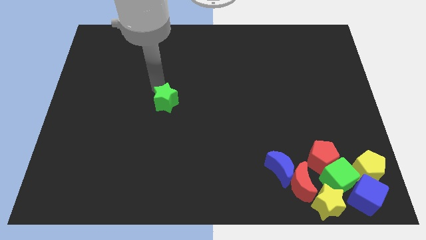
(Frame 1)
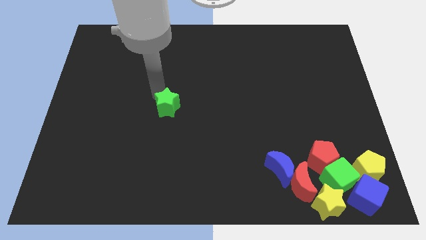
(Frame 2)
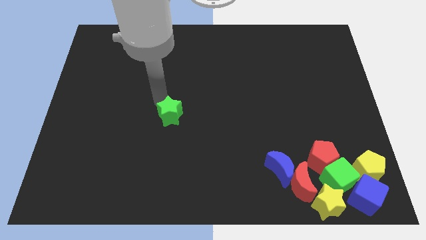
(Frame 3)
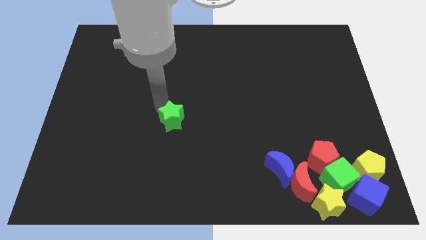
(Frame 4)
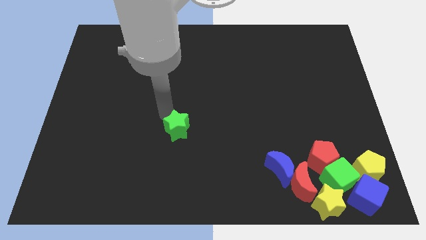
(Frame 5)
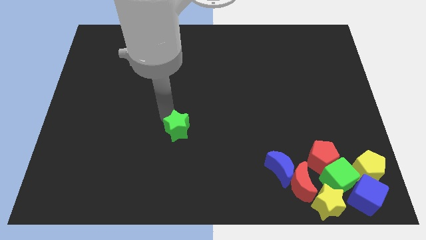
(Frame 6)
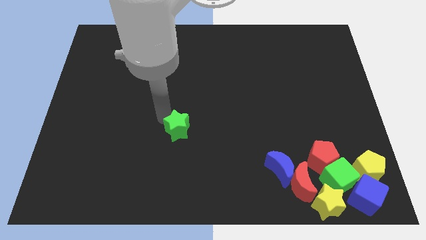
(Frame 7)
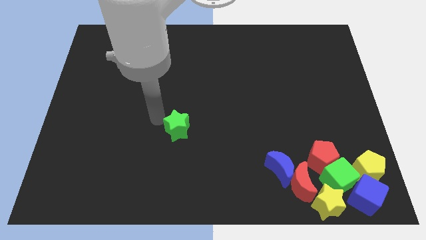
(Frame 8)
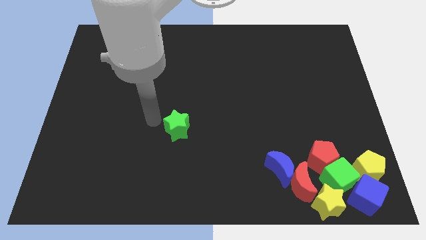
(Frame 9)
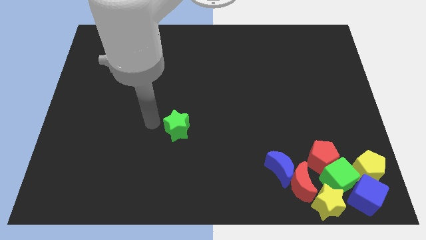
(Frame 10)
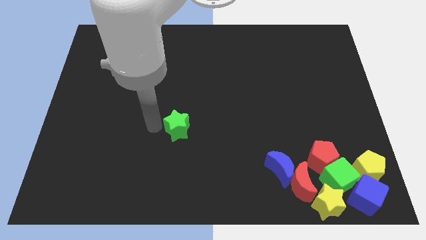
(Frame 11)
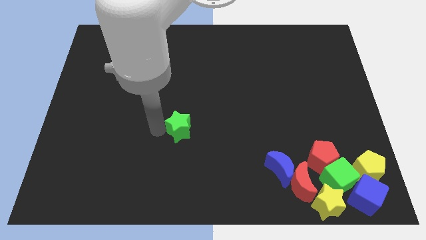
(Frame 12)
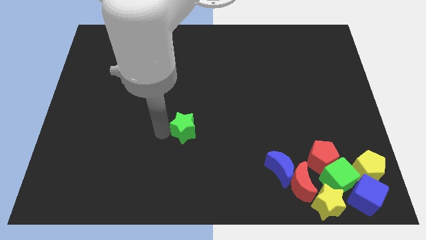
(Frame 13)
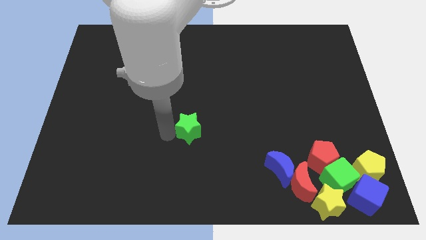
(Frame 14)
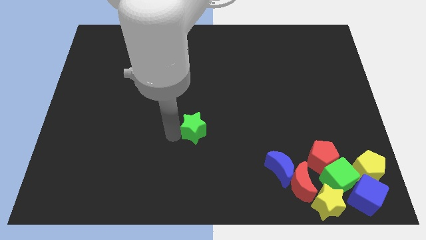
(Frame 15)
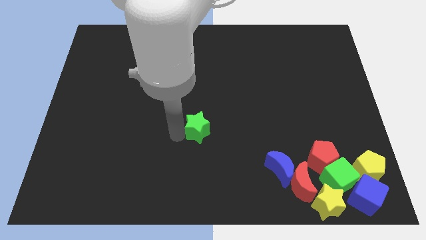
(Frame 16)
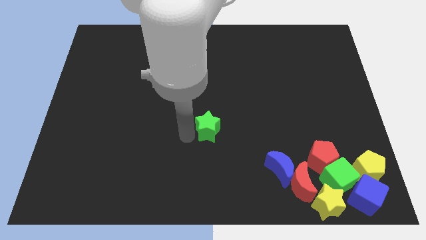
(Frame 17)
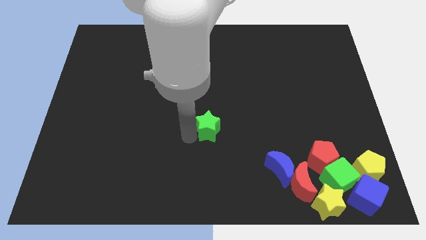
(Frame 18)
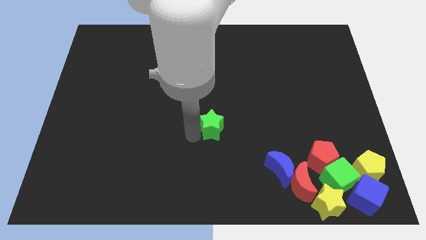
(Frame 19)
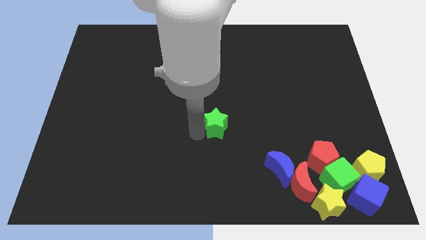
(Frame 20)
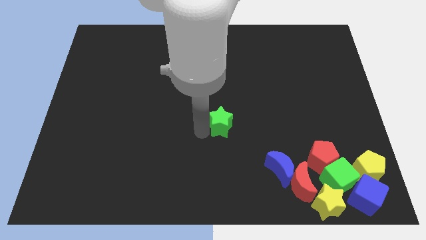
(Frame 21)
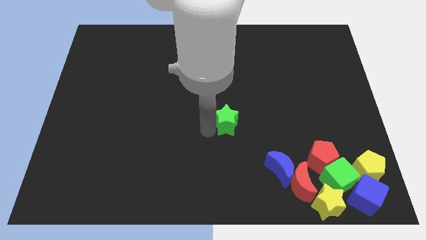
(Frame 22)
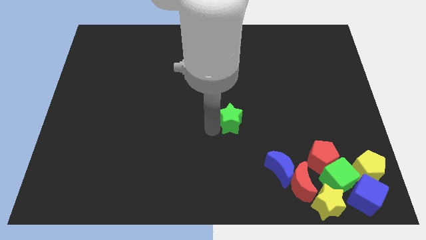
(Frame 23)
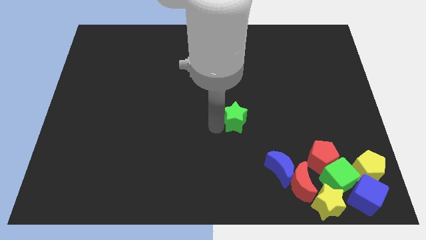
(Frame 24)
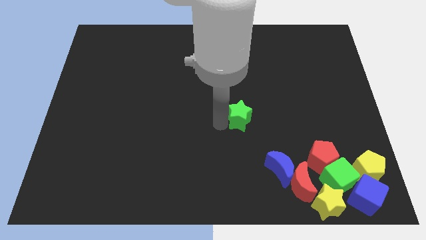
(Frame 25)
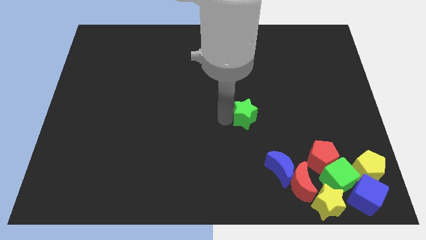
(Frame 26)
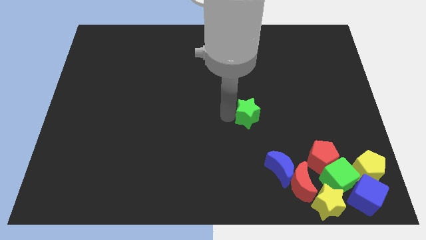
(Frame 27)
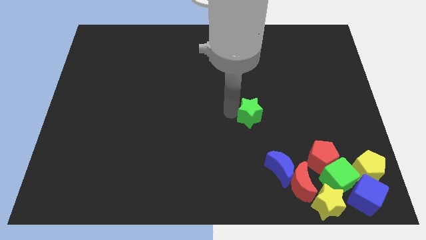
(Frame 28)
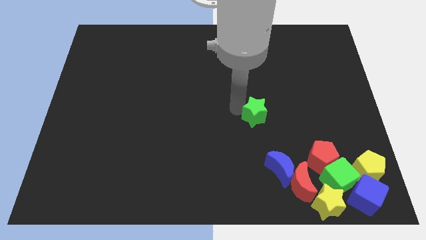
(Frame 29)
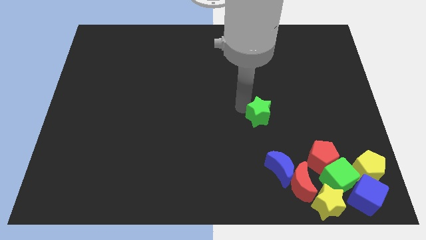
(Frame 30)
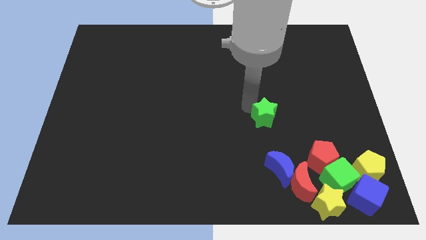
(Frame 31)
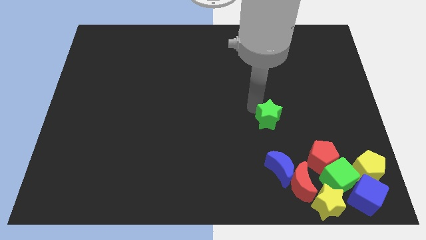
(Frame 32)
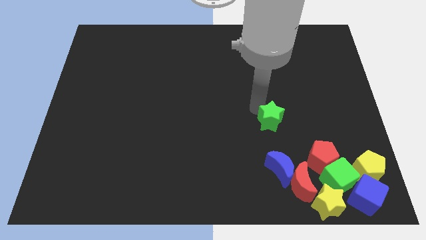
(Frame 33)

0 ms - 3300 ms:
move the green star towards the group of blocks

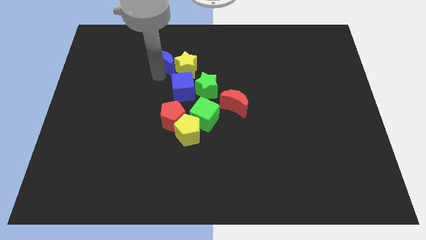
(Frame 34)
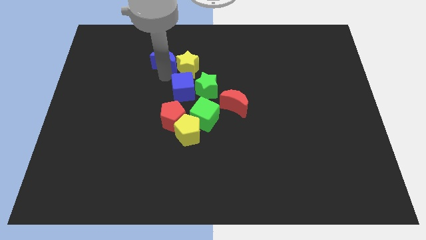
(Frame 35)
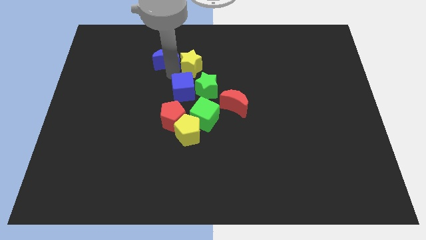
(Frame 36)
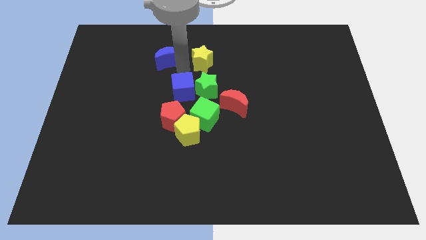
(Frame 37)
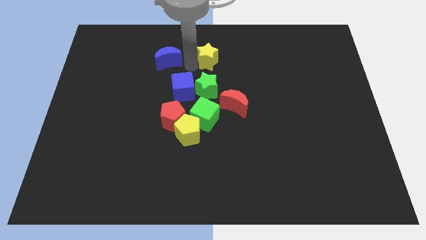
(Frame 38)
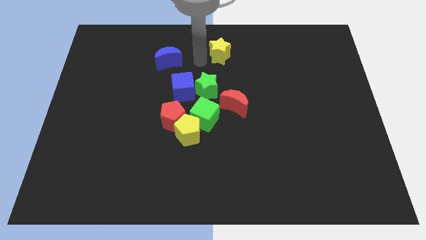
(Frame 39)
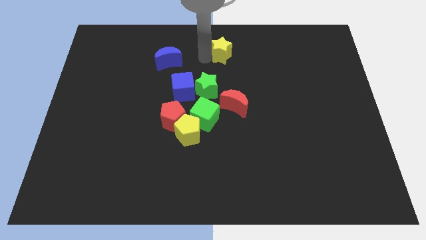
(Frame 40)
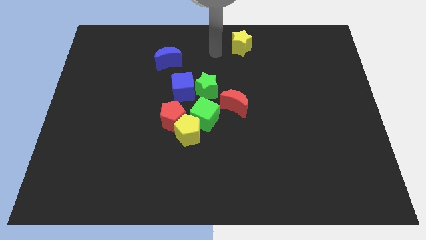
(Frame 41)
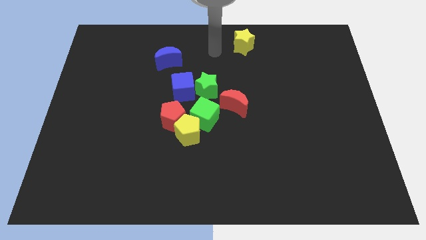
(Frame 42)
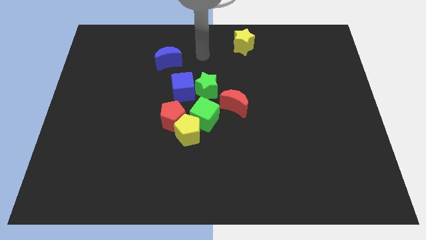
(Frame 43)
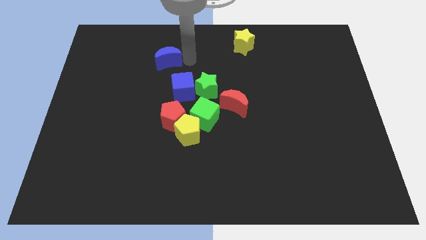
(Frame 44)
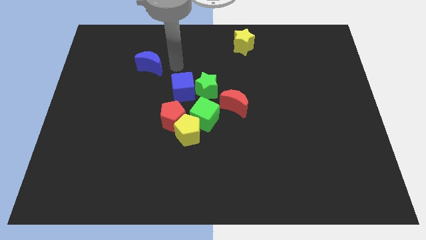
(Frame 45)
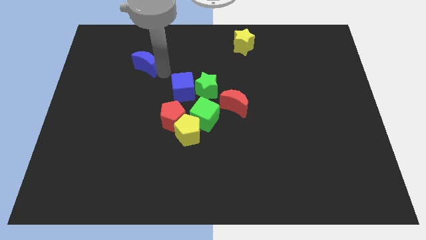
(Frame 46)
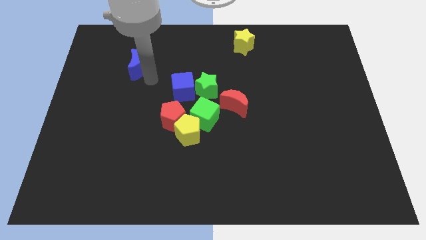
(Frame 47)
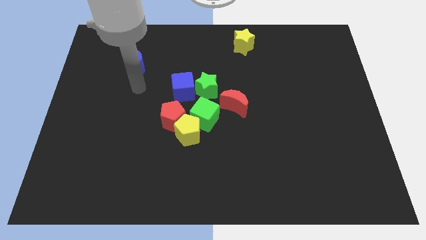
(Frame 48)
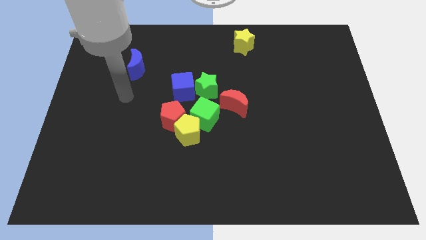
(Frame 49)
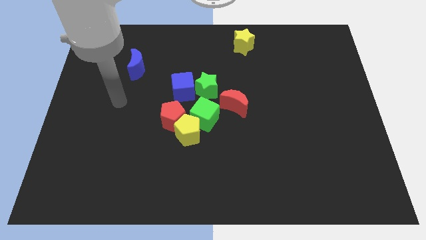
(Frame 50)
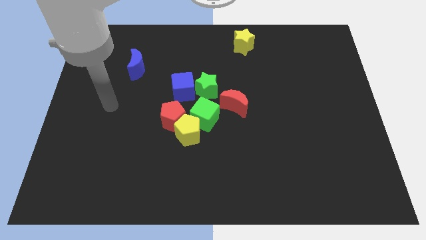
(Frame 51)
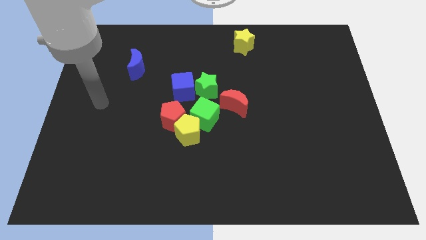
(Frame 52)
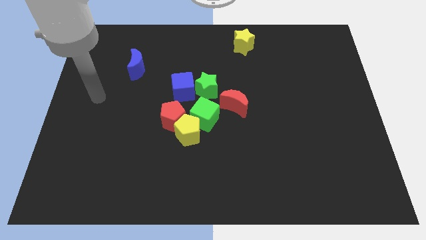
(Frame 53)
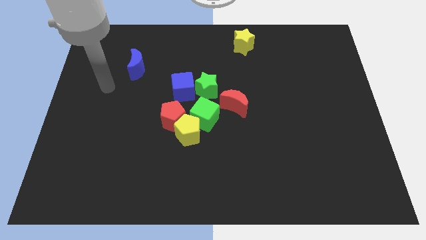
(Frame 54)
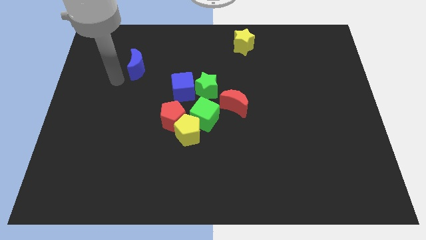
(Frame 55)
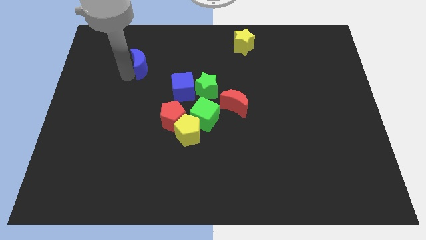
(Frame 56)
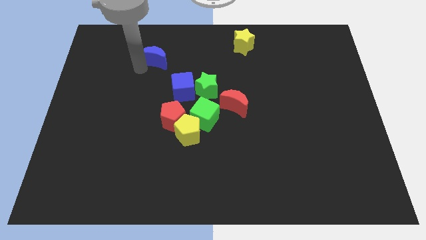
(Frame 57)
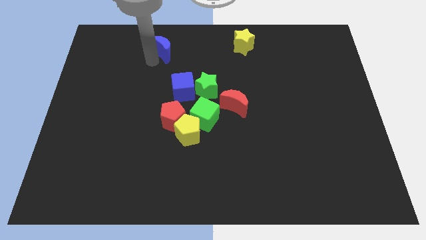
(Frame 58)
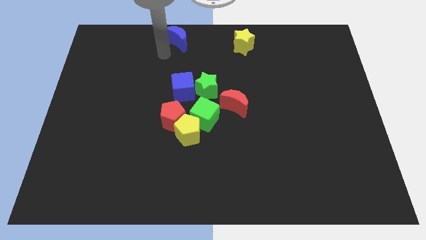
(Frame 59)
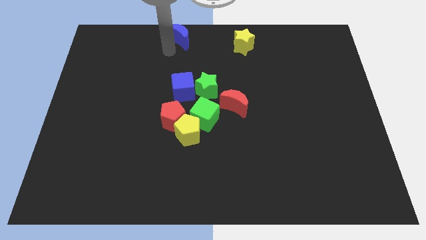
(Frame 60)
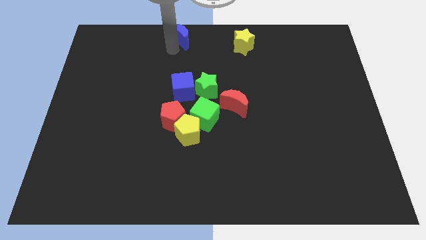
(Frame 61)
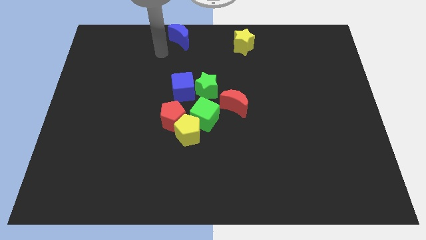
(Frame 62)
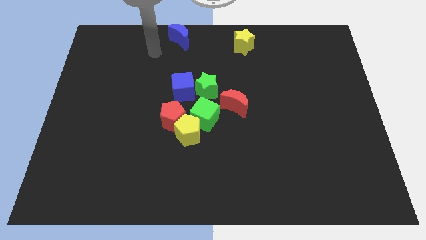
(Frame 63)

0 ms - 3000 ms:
move the yellow star and the blue crescent to the top of the board

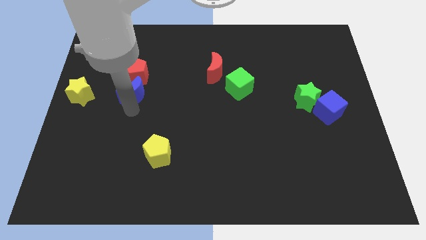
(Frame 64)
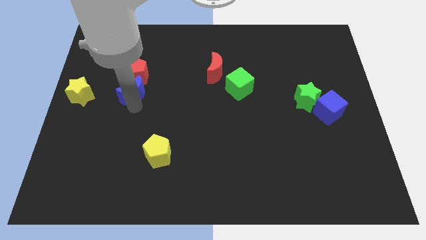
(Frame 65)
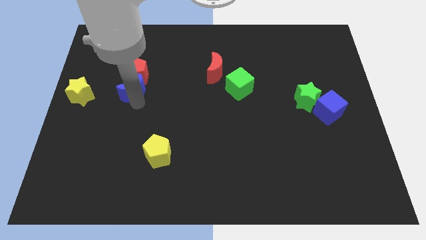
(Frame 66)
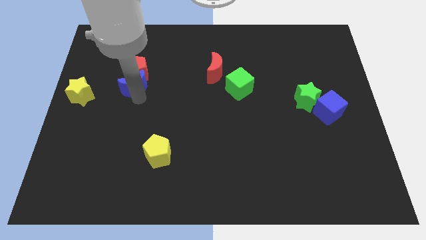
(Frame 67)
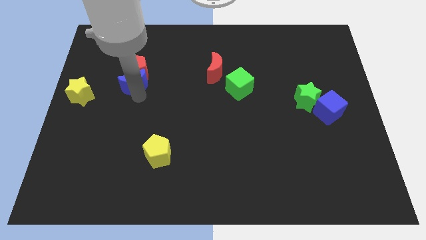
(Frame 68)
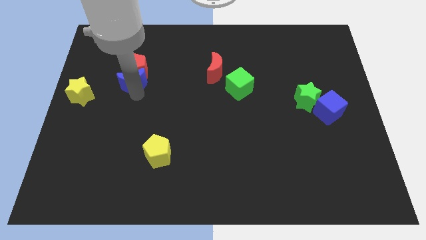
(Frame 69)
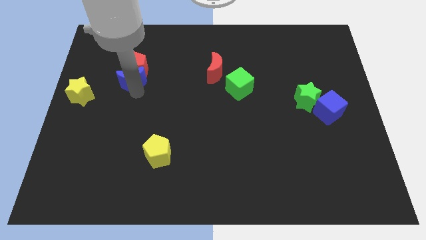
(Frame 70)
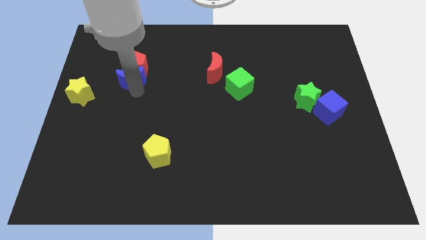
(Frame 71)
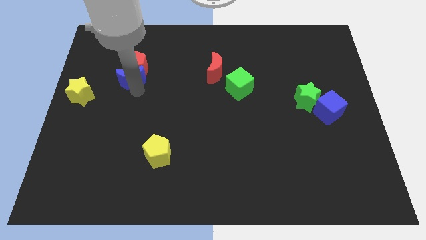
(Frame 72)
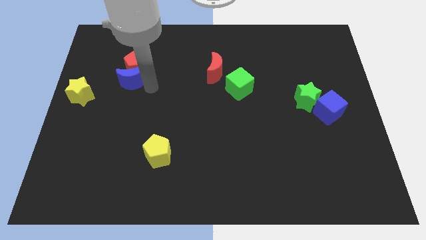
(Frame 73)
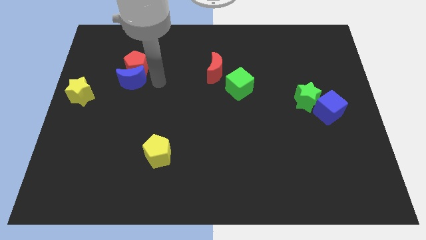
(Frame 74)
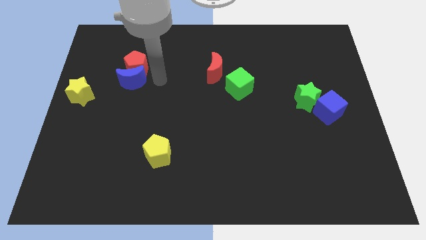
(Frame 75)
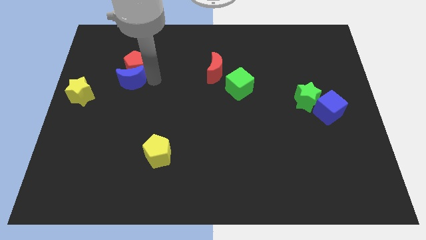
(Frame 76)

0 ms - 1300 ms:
slide the blue moon into the red pentagon

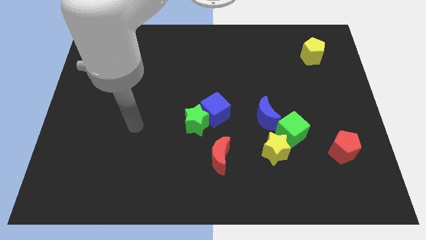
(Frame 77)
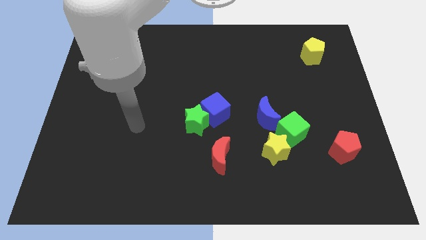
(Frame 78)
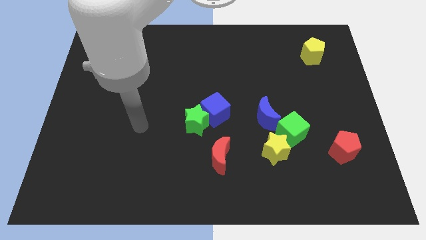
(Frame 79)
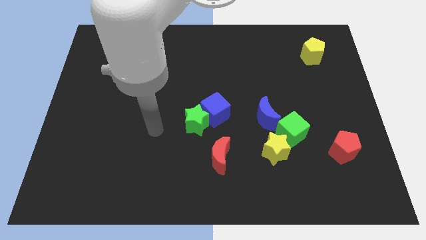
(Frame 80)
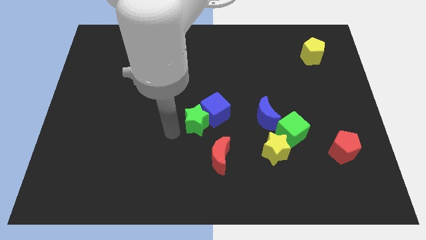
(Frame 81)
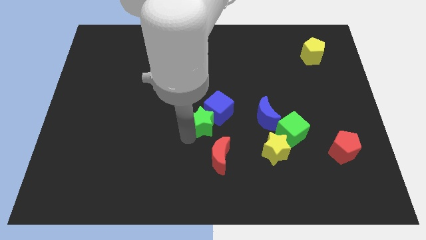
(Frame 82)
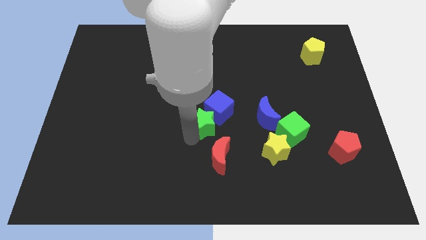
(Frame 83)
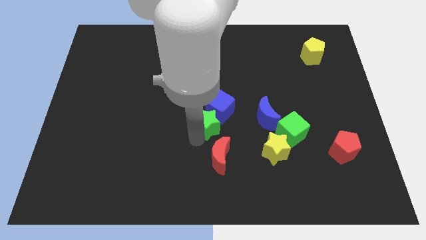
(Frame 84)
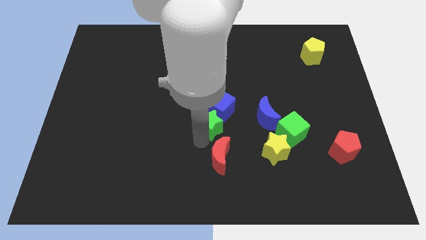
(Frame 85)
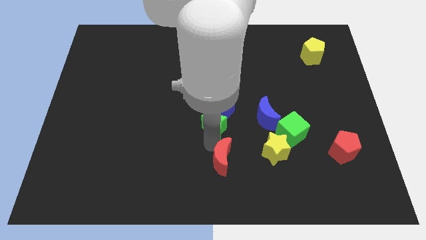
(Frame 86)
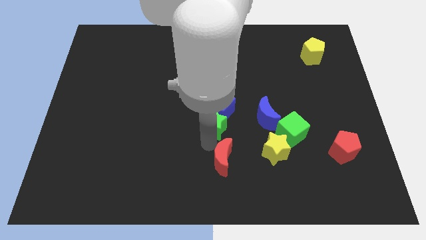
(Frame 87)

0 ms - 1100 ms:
move the green star towards the red moon

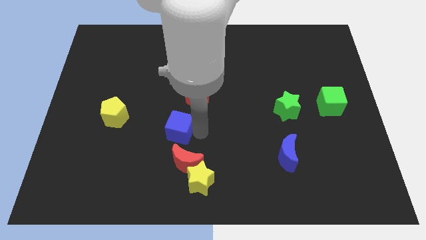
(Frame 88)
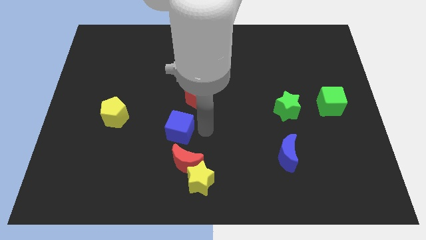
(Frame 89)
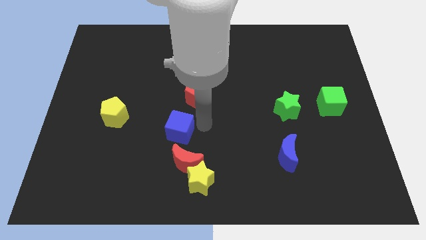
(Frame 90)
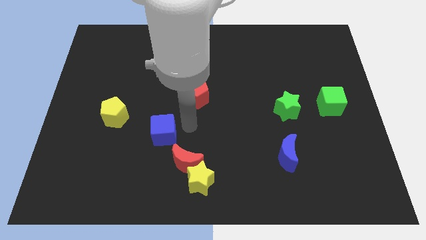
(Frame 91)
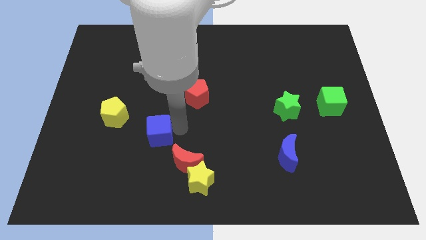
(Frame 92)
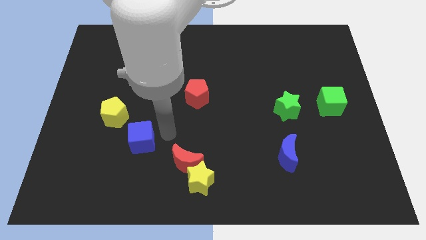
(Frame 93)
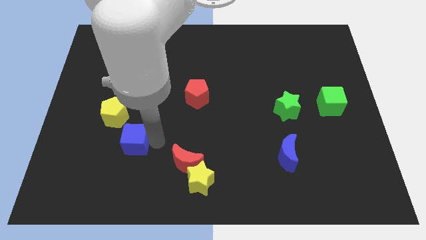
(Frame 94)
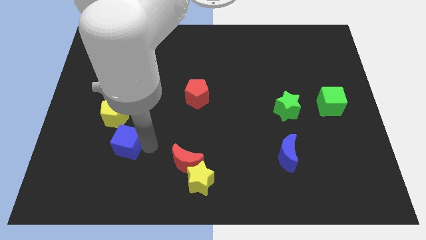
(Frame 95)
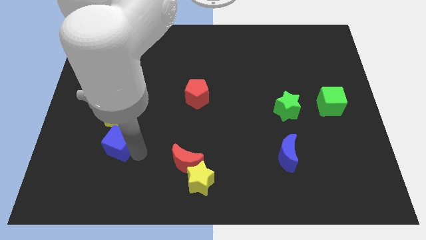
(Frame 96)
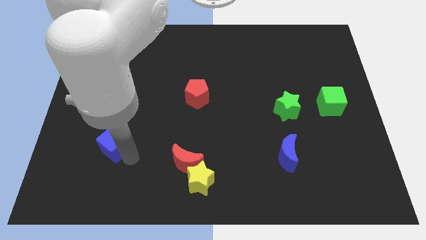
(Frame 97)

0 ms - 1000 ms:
place the blue cube below the yellow pentagon
